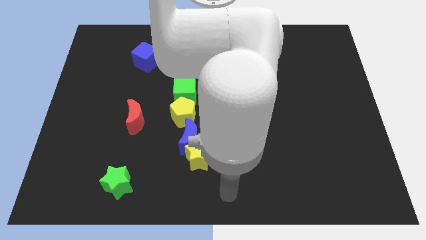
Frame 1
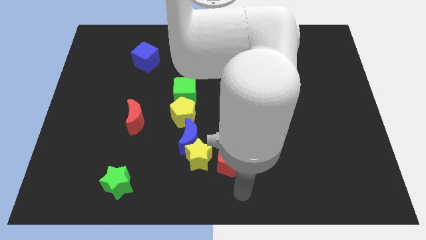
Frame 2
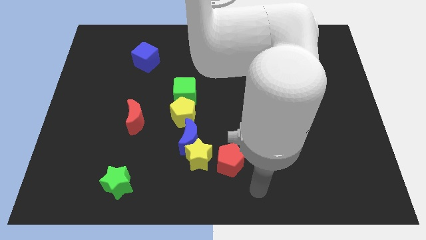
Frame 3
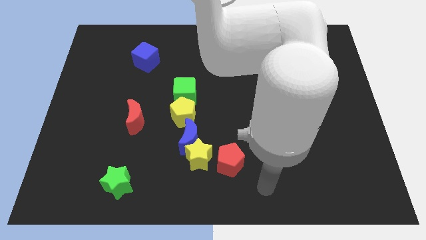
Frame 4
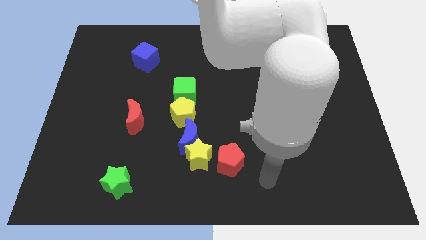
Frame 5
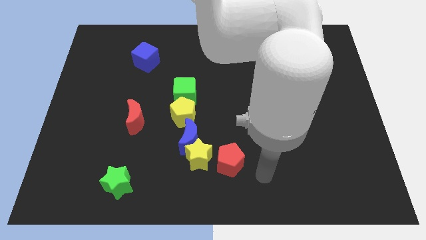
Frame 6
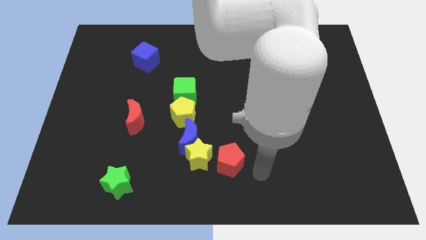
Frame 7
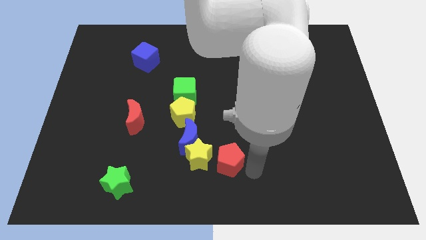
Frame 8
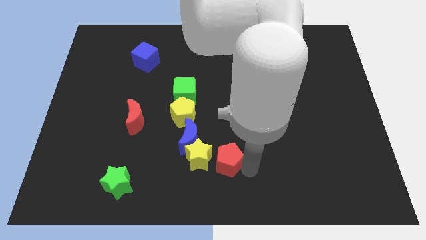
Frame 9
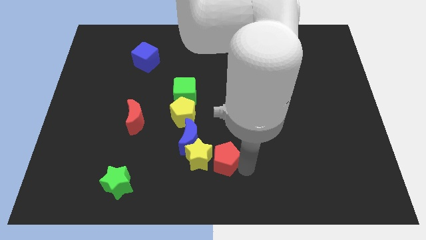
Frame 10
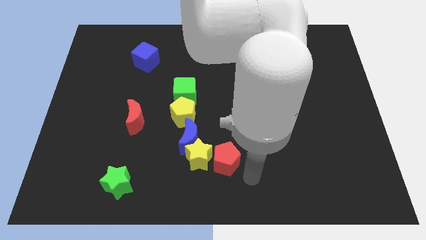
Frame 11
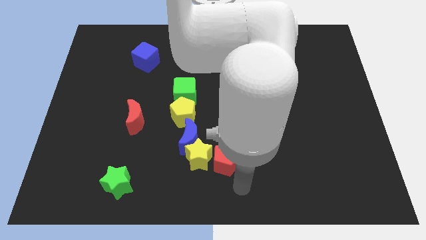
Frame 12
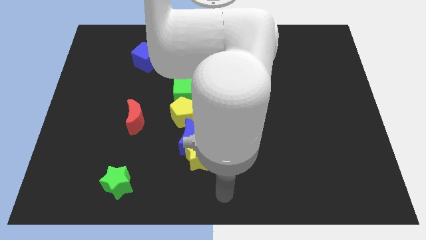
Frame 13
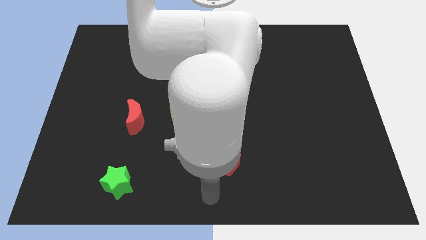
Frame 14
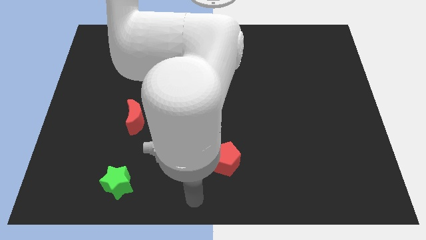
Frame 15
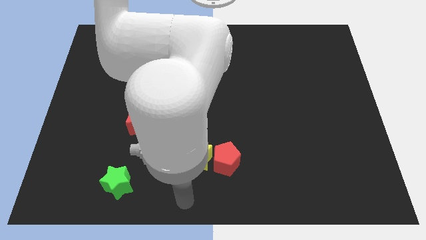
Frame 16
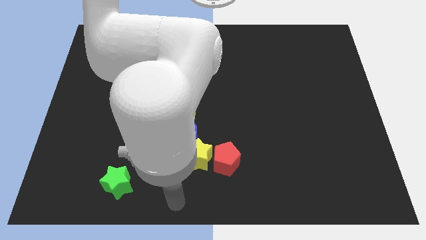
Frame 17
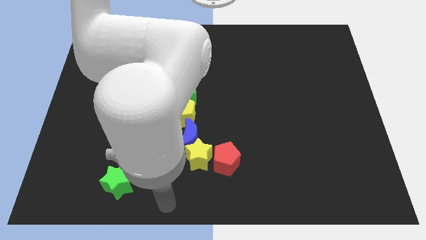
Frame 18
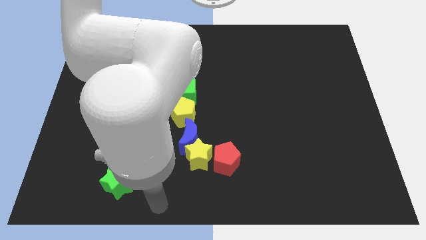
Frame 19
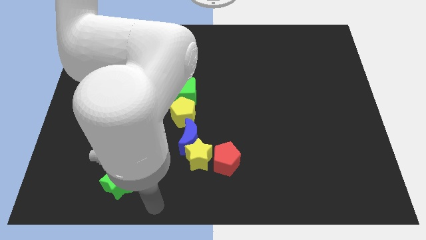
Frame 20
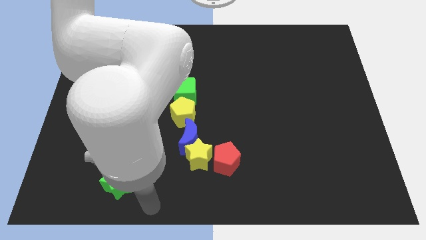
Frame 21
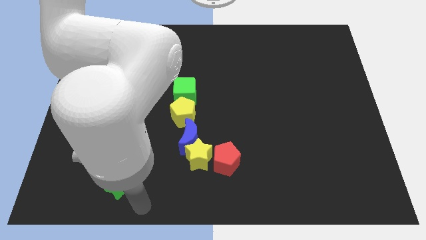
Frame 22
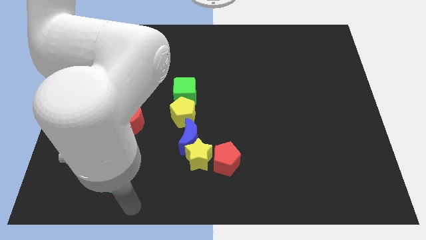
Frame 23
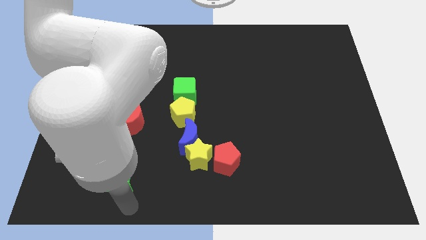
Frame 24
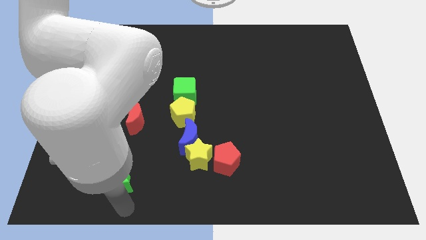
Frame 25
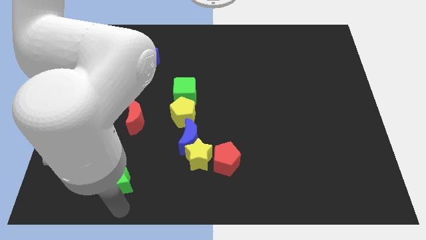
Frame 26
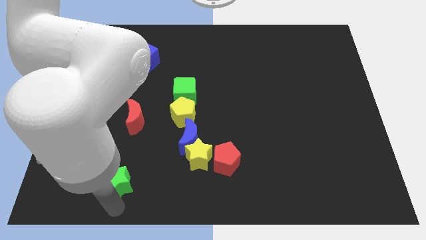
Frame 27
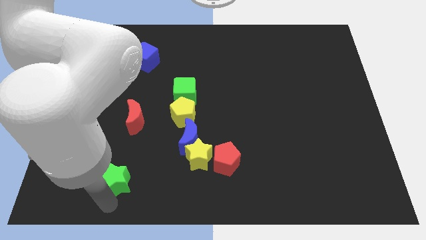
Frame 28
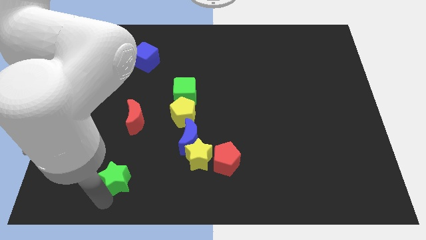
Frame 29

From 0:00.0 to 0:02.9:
place the arm down to the green star

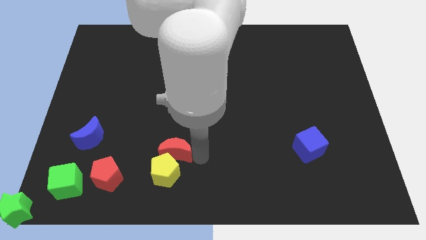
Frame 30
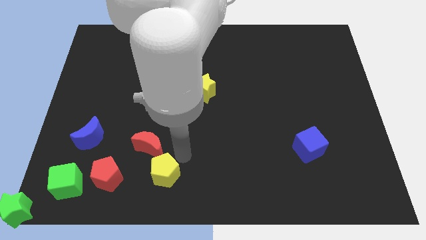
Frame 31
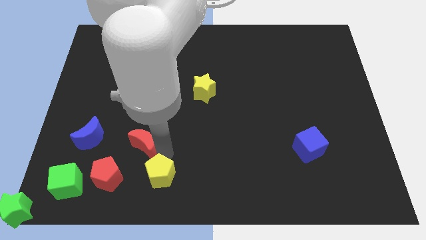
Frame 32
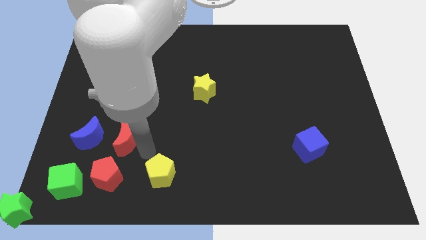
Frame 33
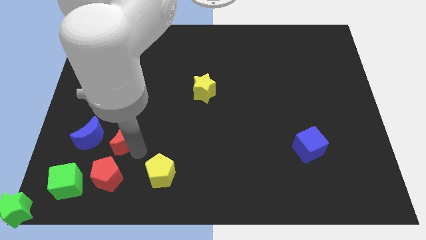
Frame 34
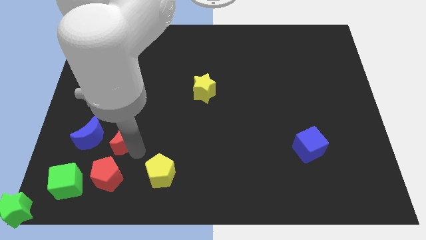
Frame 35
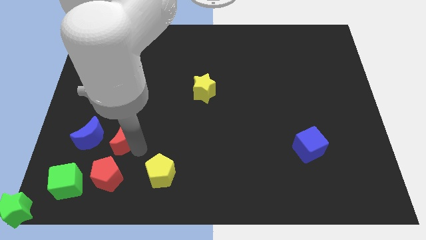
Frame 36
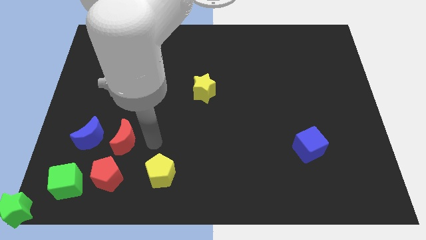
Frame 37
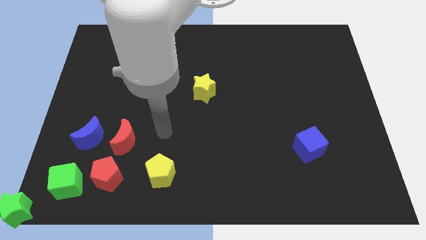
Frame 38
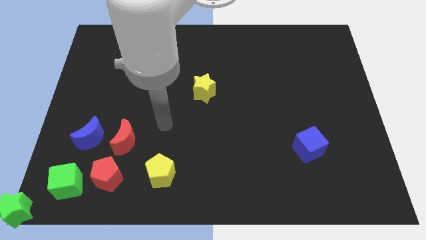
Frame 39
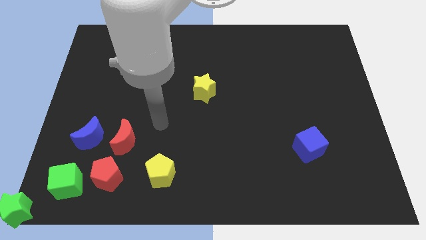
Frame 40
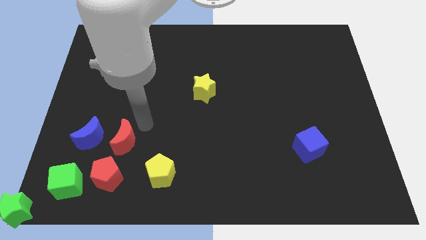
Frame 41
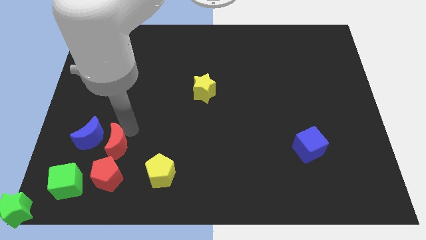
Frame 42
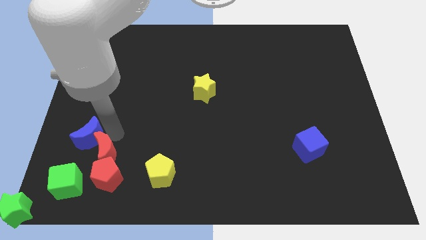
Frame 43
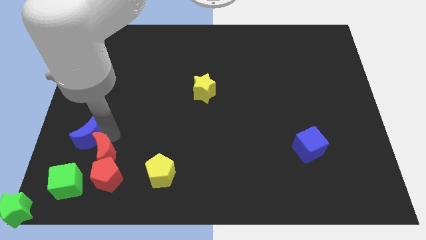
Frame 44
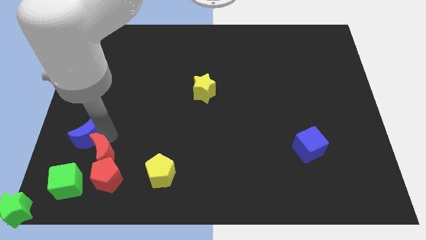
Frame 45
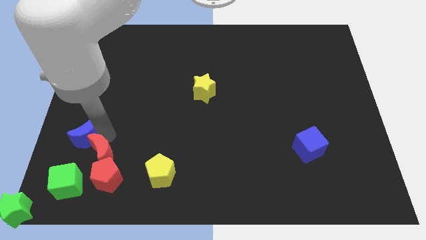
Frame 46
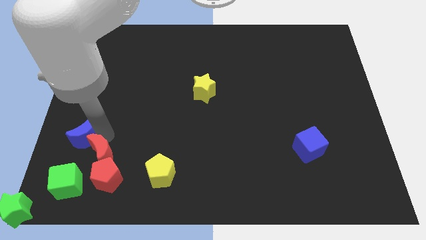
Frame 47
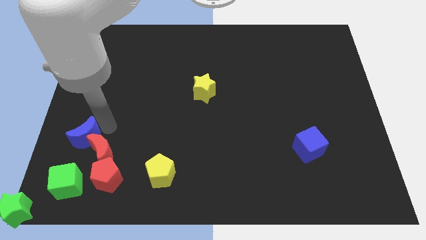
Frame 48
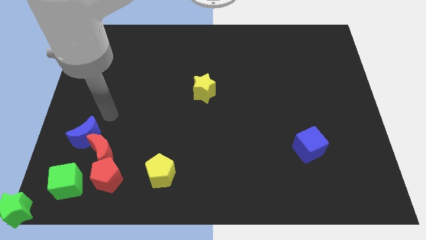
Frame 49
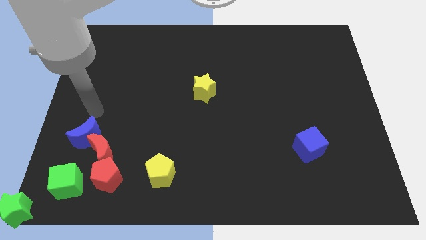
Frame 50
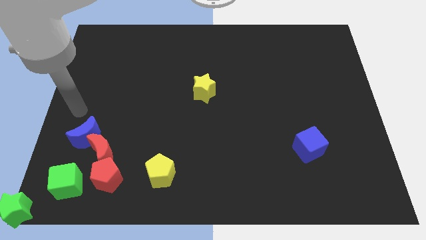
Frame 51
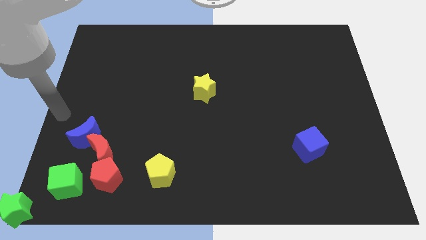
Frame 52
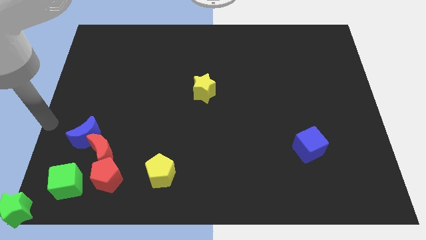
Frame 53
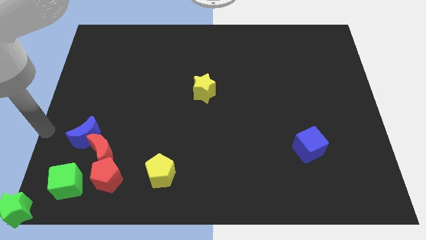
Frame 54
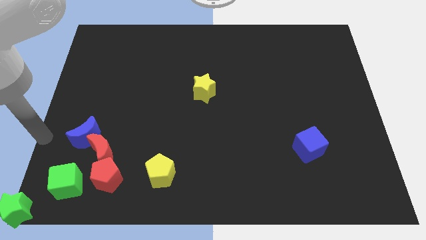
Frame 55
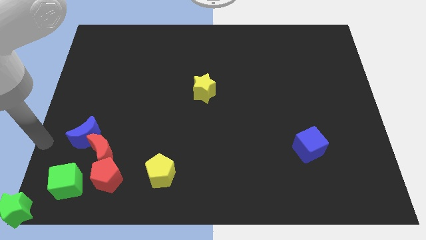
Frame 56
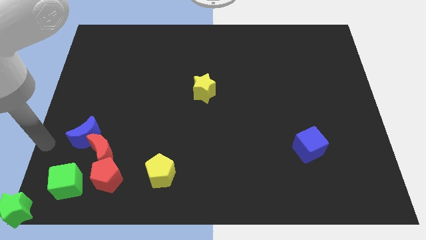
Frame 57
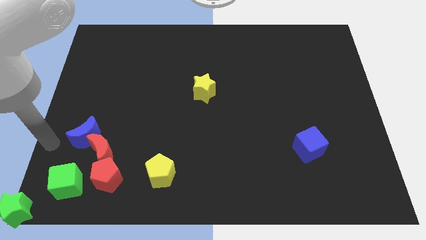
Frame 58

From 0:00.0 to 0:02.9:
place the red moon between the blue moon and red pentagon

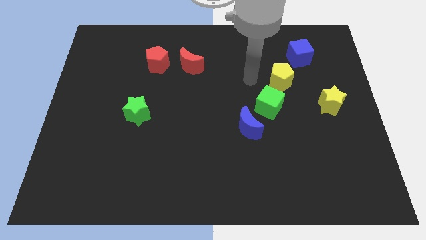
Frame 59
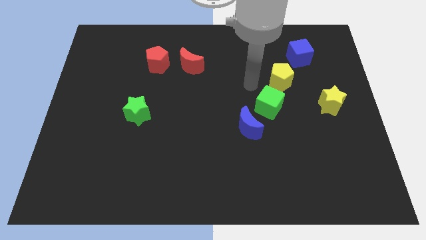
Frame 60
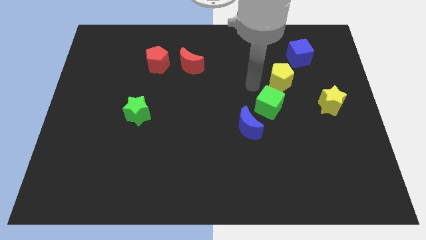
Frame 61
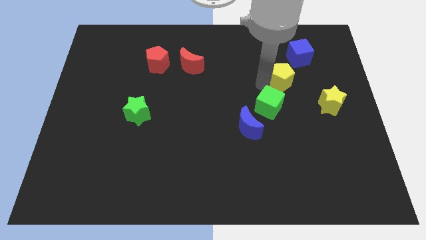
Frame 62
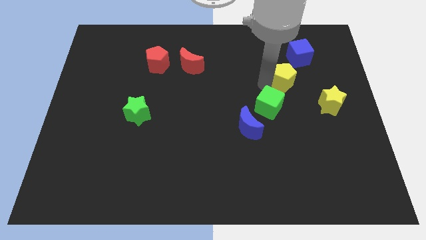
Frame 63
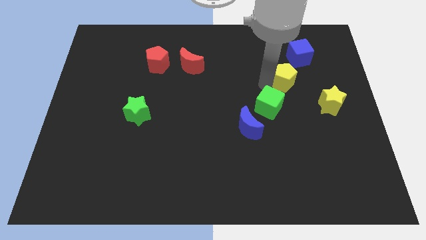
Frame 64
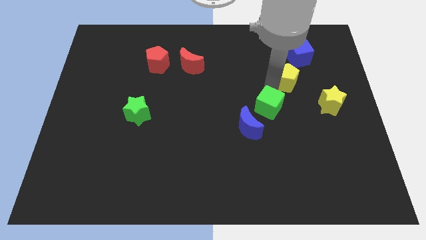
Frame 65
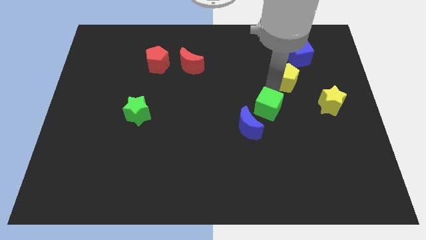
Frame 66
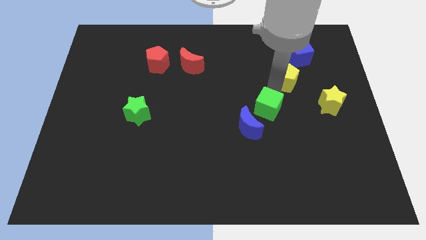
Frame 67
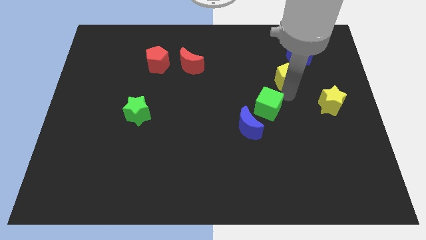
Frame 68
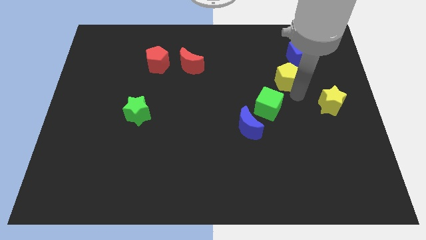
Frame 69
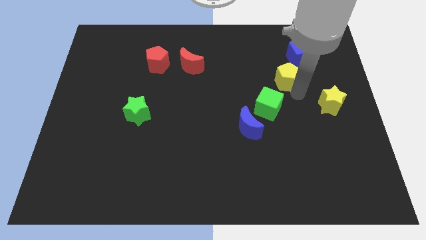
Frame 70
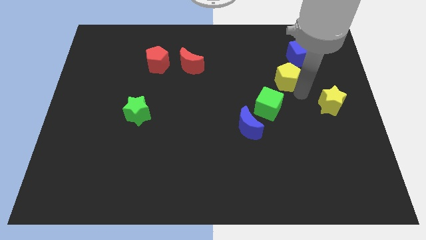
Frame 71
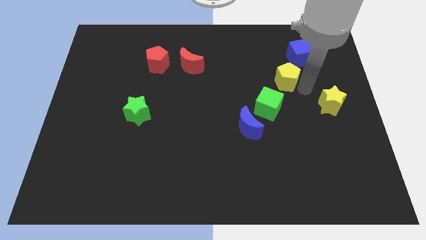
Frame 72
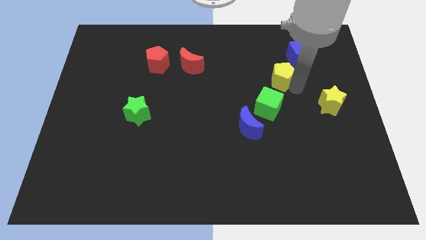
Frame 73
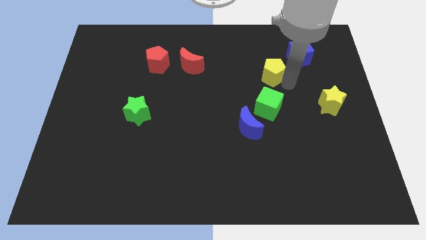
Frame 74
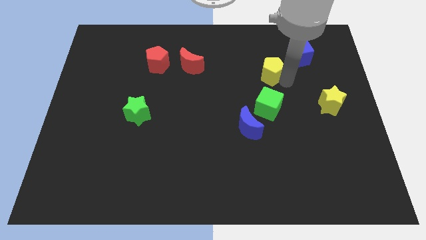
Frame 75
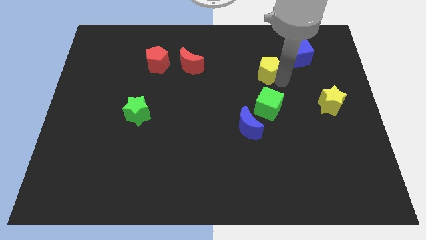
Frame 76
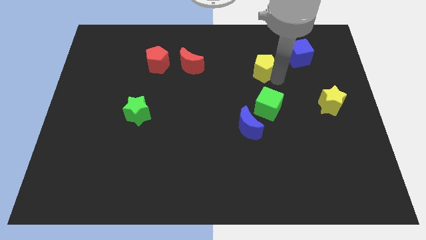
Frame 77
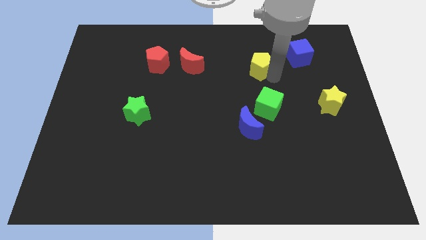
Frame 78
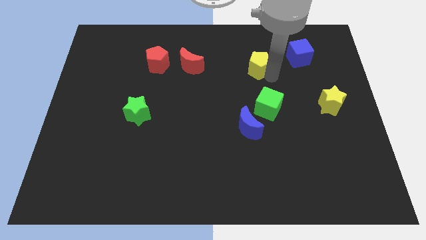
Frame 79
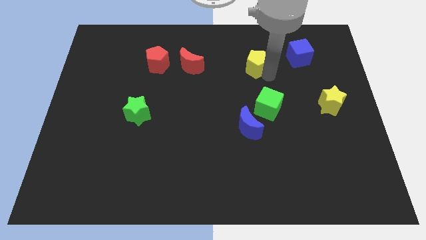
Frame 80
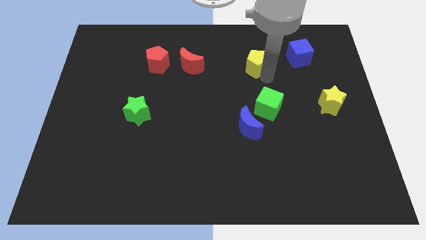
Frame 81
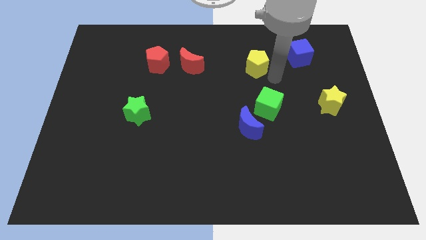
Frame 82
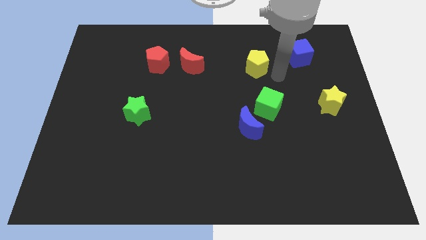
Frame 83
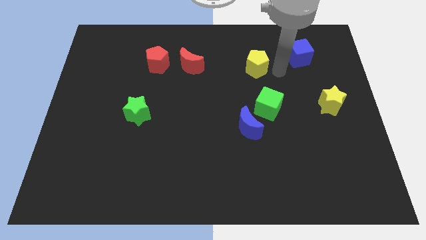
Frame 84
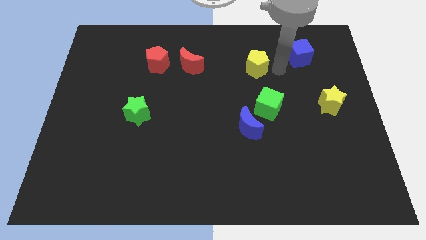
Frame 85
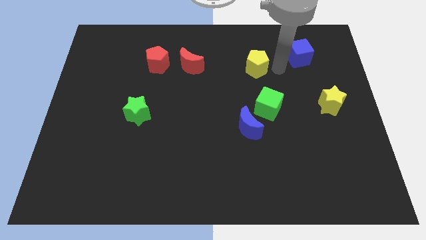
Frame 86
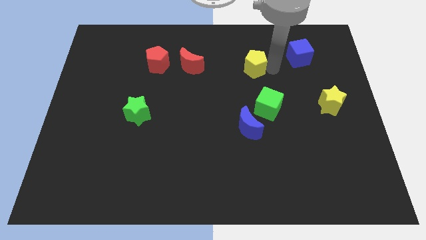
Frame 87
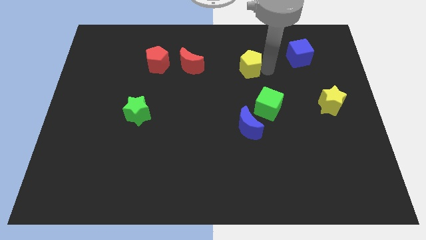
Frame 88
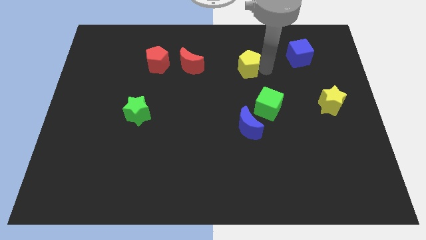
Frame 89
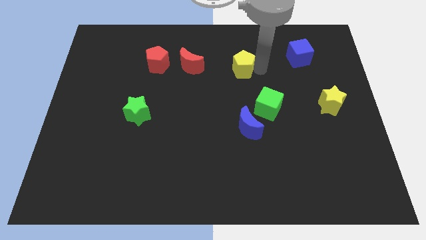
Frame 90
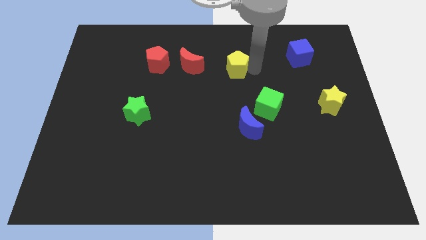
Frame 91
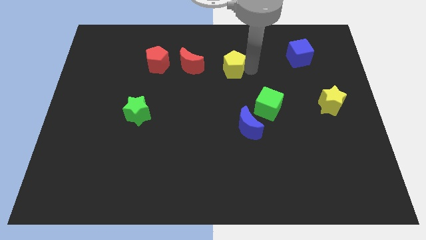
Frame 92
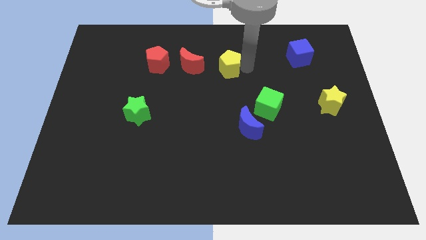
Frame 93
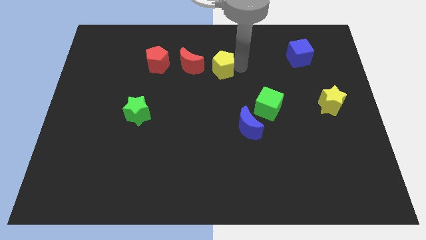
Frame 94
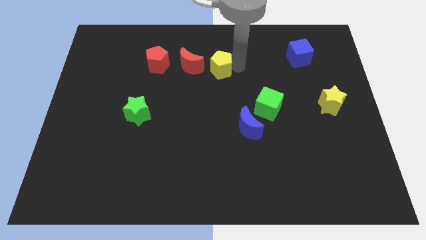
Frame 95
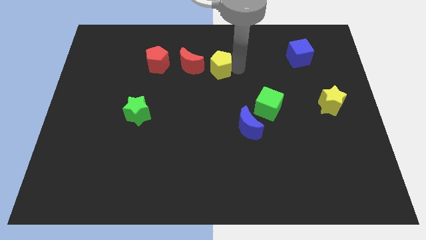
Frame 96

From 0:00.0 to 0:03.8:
put the yellow pentagon right if the red moon
